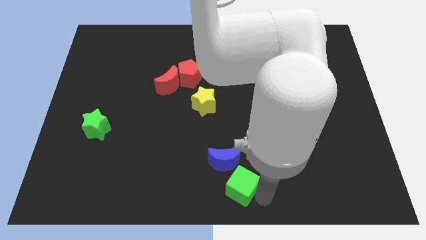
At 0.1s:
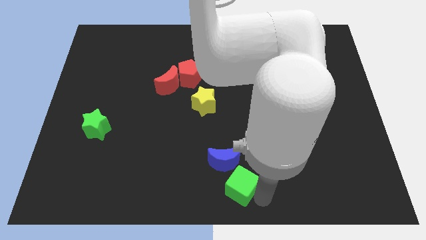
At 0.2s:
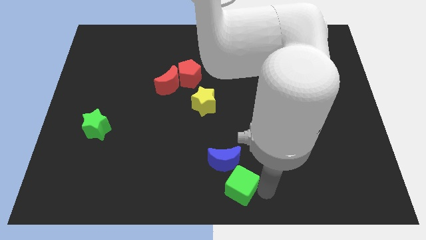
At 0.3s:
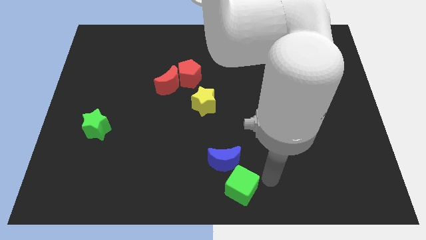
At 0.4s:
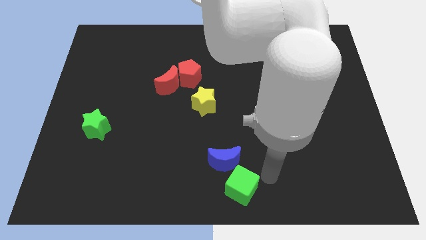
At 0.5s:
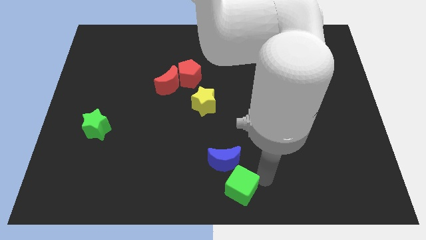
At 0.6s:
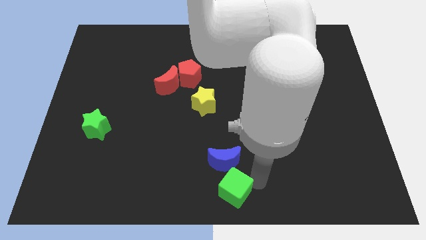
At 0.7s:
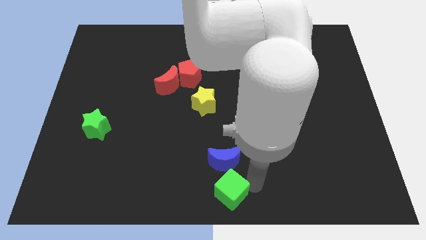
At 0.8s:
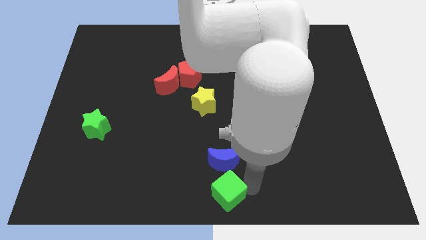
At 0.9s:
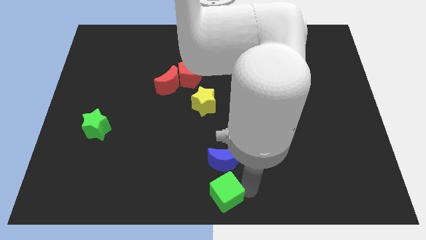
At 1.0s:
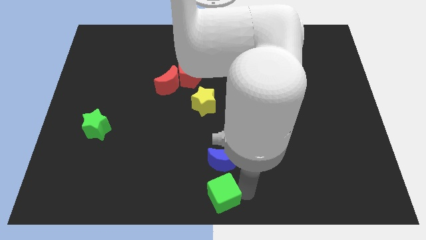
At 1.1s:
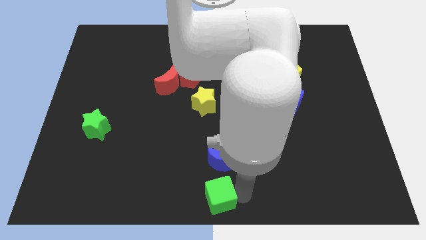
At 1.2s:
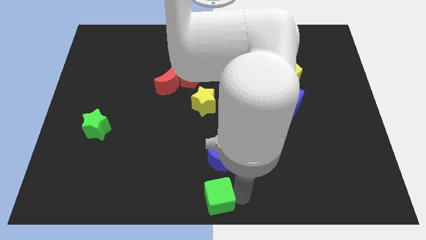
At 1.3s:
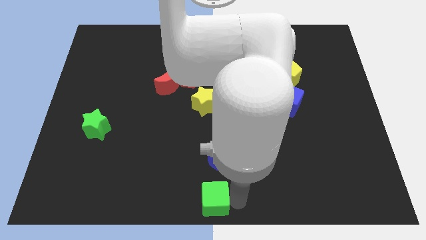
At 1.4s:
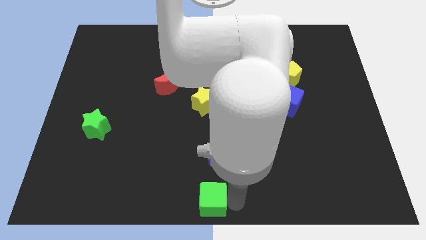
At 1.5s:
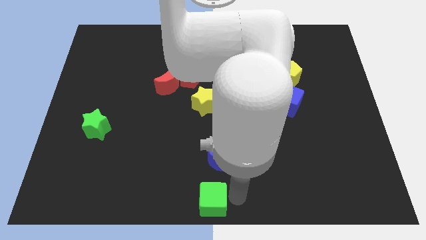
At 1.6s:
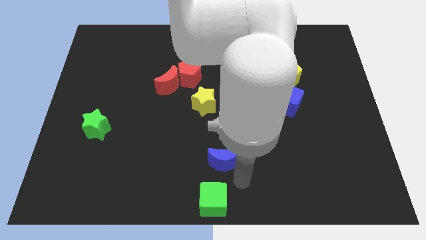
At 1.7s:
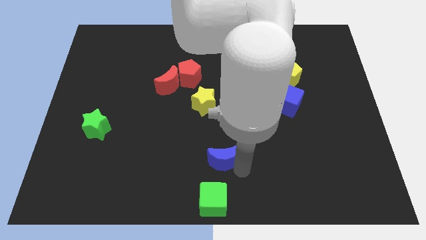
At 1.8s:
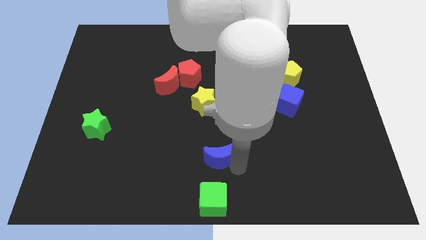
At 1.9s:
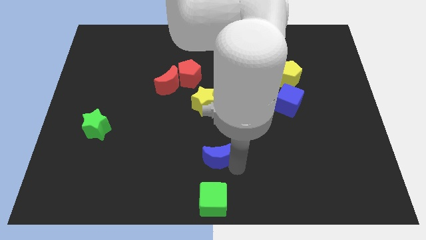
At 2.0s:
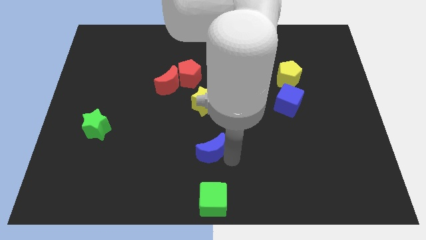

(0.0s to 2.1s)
move the blue moon over the green cube

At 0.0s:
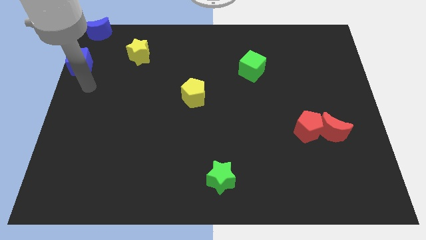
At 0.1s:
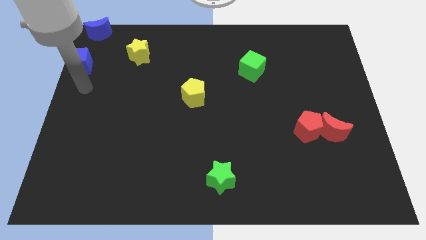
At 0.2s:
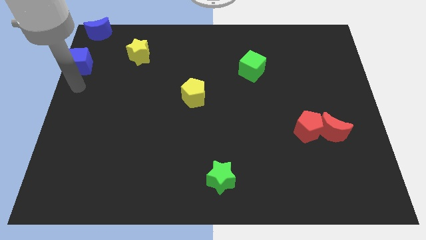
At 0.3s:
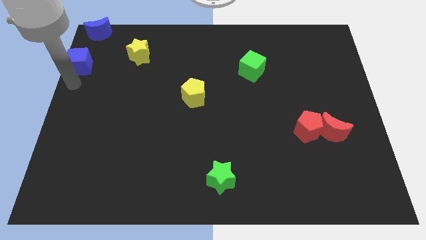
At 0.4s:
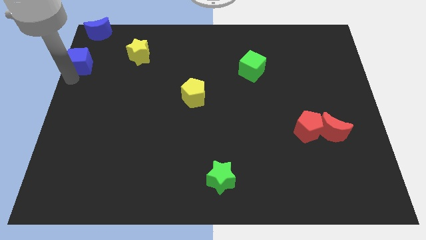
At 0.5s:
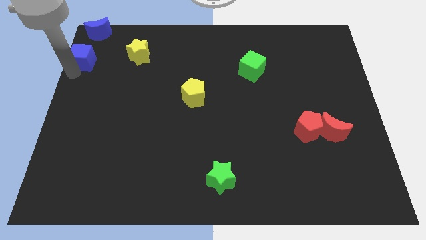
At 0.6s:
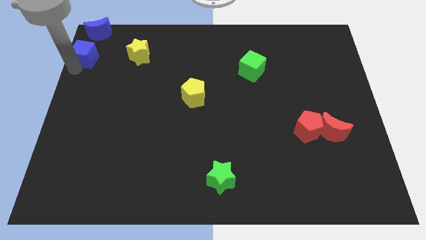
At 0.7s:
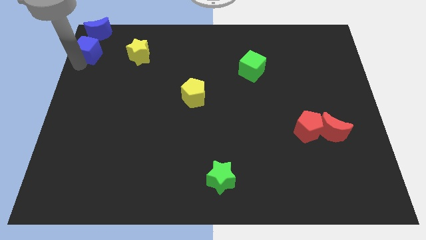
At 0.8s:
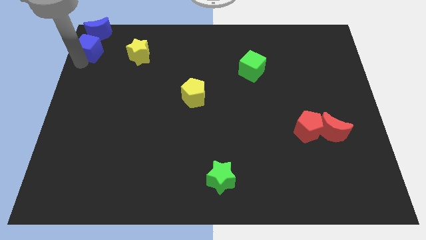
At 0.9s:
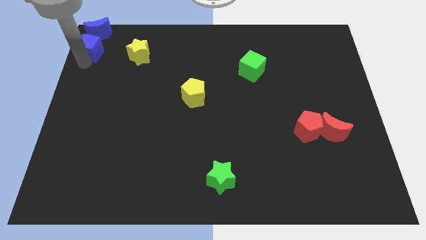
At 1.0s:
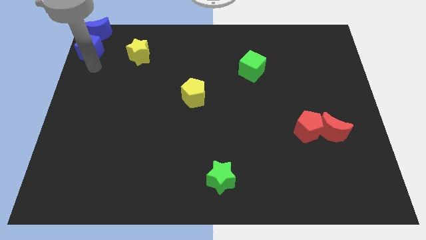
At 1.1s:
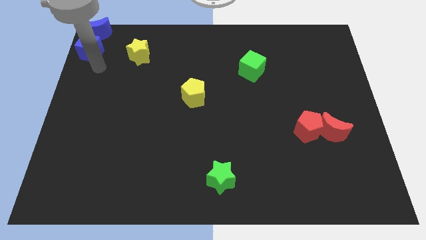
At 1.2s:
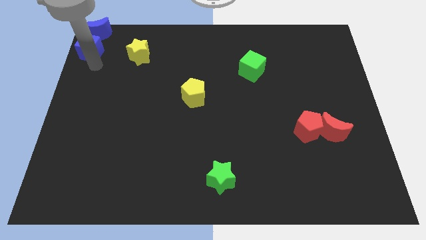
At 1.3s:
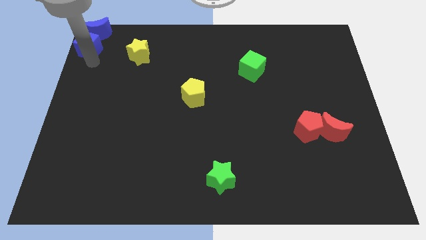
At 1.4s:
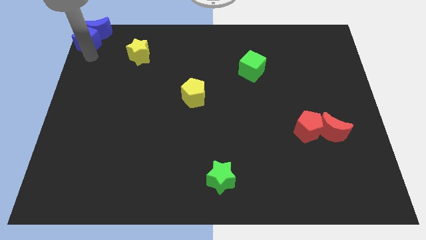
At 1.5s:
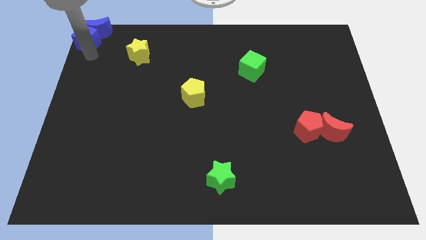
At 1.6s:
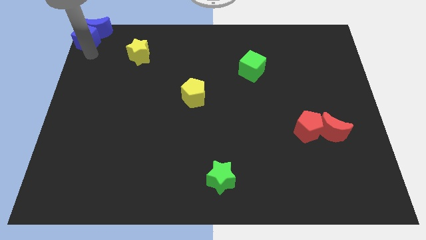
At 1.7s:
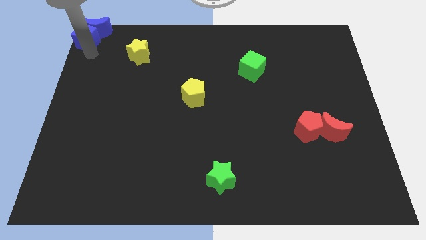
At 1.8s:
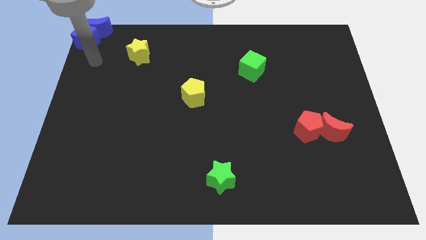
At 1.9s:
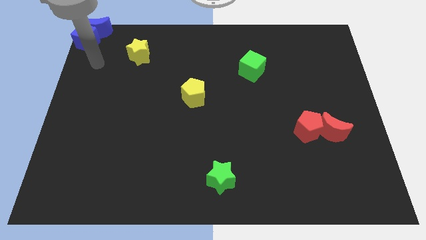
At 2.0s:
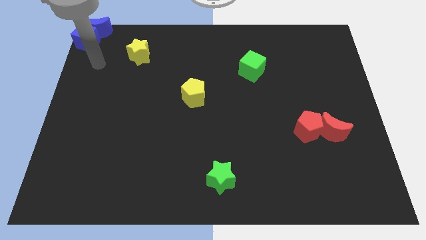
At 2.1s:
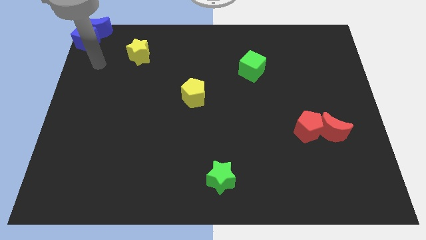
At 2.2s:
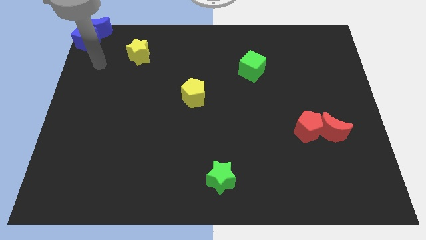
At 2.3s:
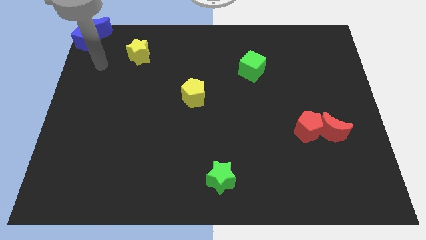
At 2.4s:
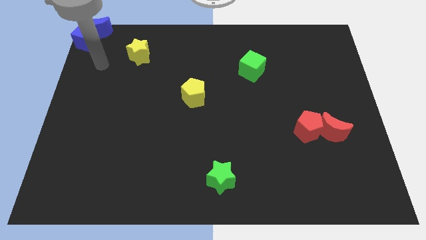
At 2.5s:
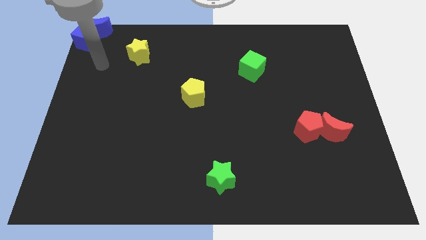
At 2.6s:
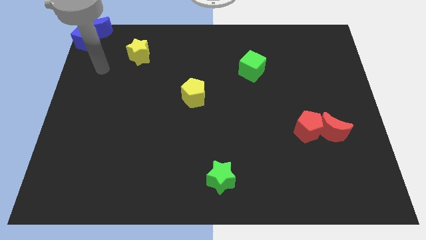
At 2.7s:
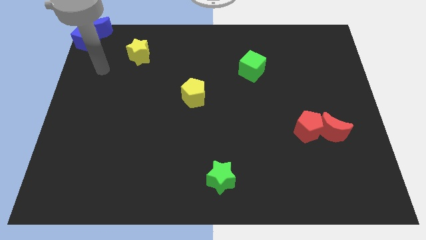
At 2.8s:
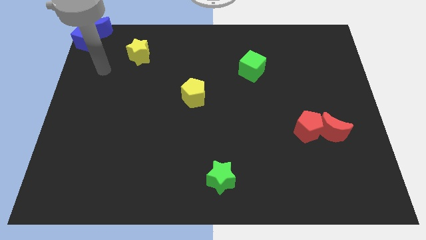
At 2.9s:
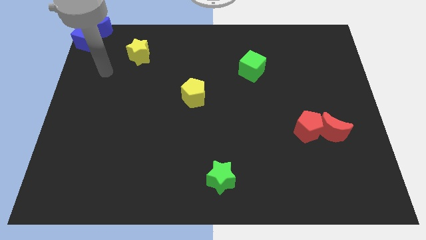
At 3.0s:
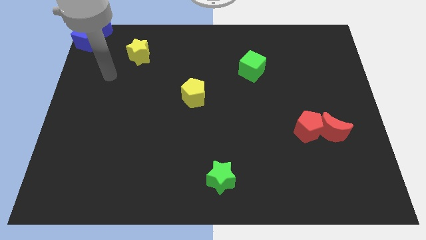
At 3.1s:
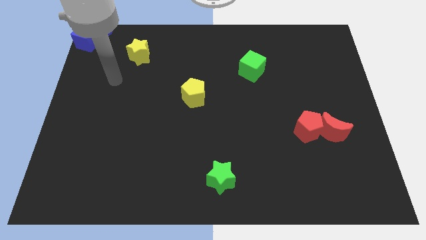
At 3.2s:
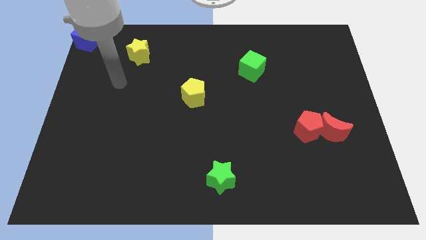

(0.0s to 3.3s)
push the blue cube into the blue moon

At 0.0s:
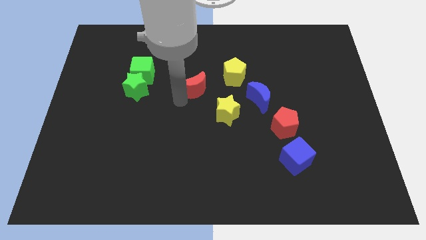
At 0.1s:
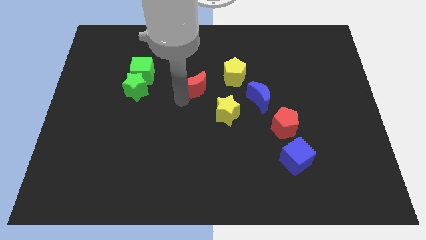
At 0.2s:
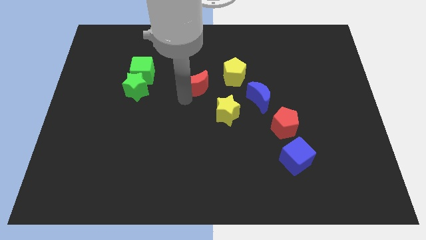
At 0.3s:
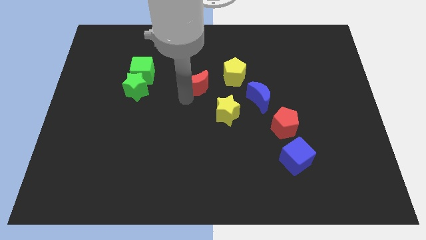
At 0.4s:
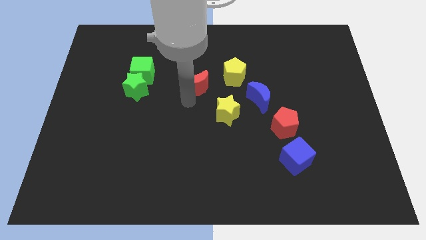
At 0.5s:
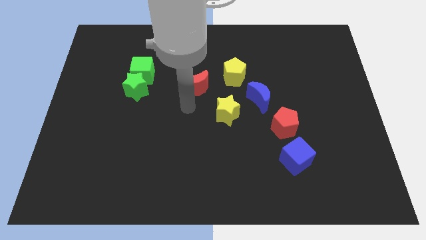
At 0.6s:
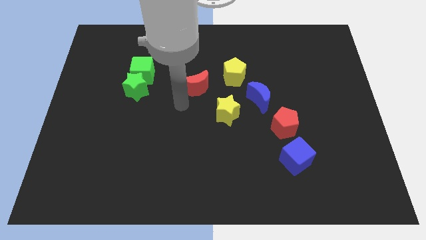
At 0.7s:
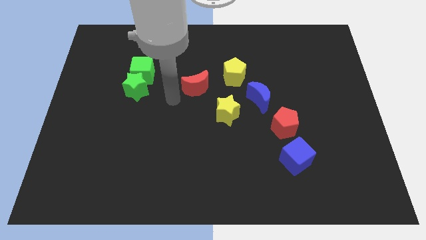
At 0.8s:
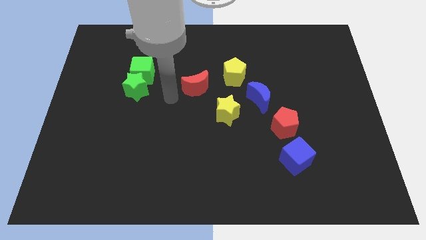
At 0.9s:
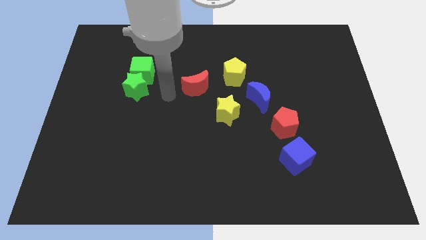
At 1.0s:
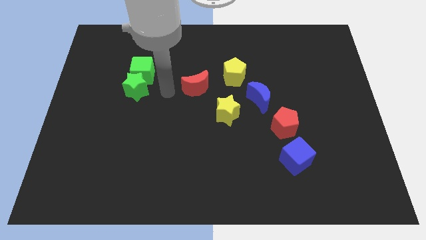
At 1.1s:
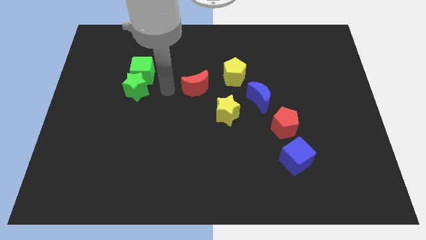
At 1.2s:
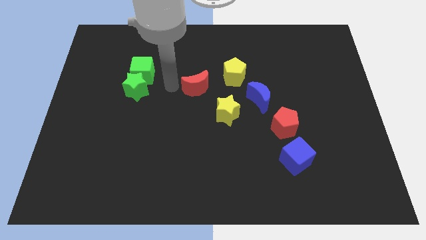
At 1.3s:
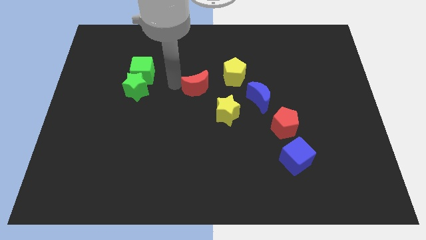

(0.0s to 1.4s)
slightly move the red moon

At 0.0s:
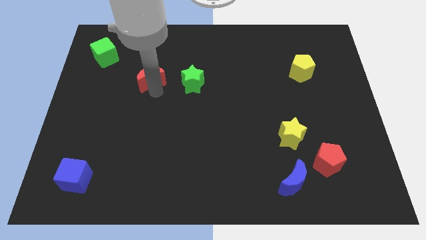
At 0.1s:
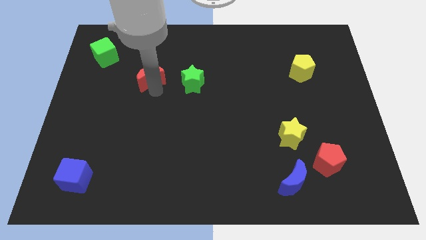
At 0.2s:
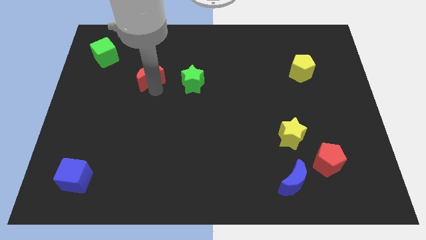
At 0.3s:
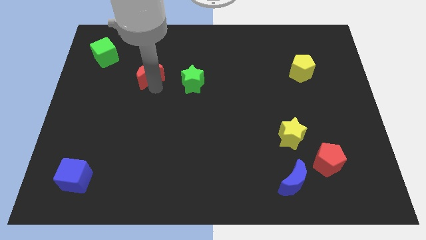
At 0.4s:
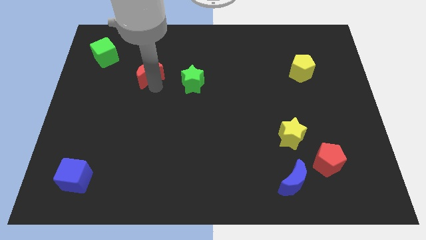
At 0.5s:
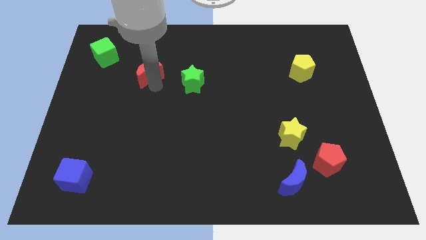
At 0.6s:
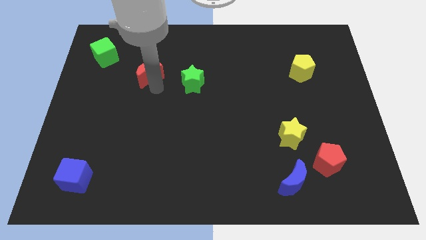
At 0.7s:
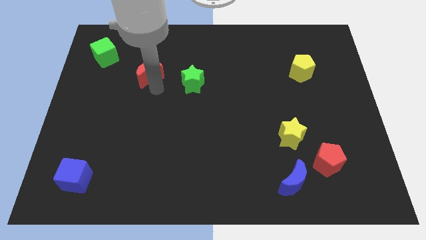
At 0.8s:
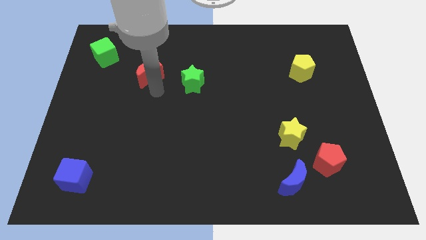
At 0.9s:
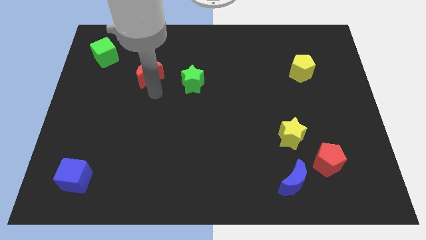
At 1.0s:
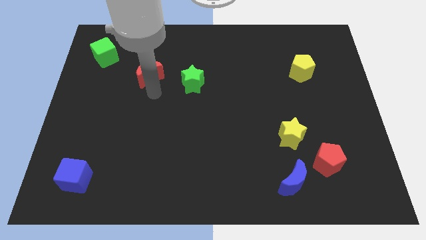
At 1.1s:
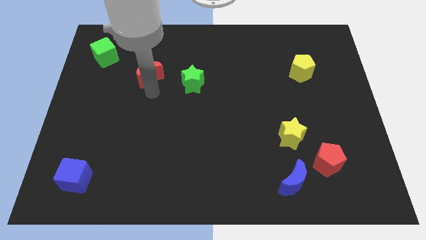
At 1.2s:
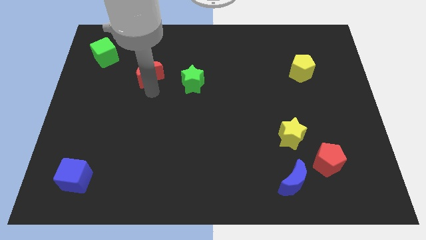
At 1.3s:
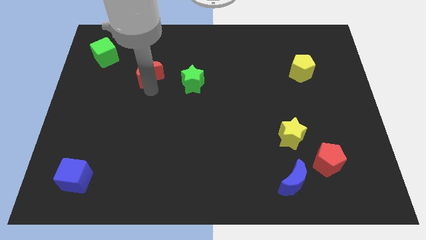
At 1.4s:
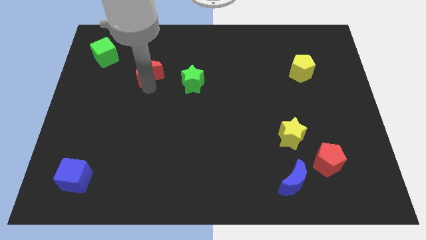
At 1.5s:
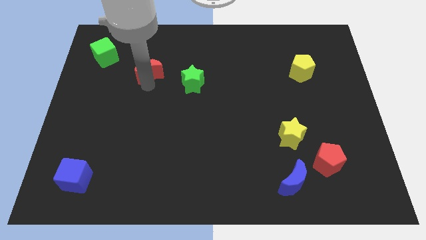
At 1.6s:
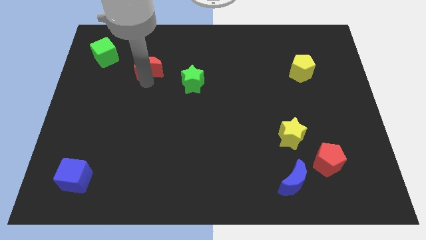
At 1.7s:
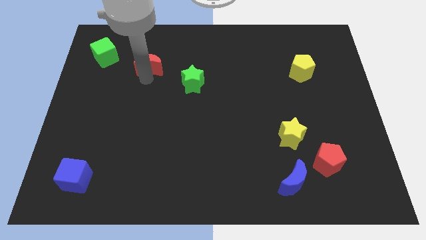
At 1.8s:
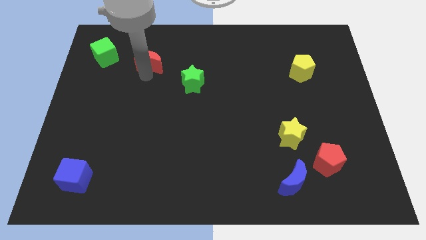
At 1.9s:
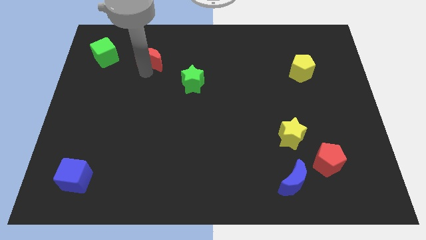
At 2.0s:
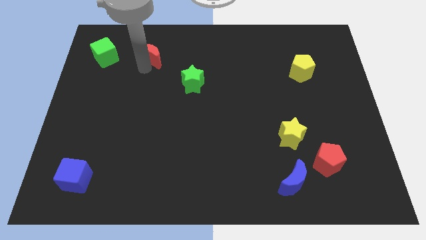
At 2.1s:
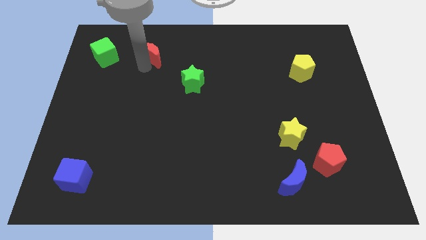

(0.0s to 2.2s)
push the red moon away from the green star
